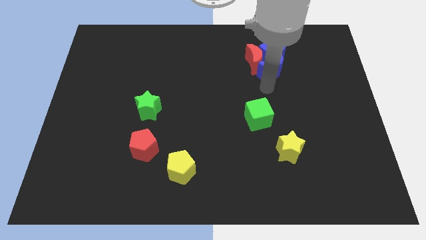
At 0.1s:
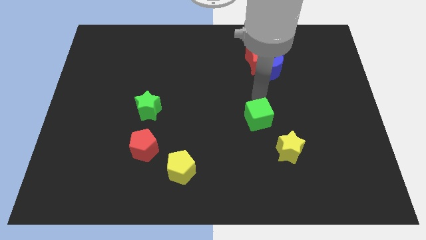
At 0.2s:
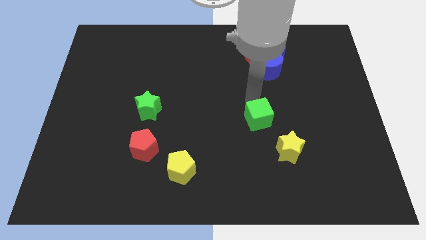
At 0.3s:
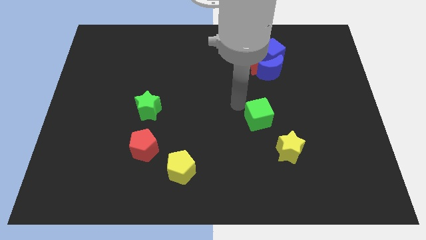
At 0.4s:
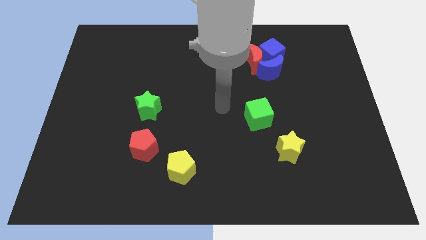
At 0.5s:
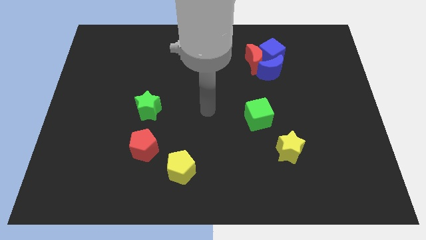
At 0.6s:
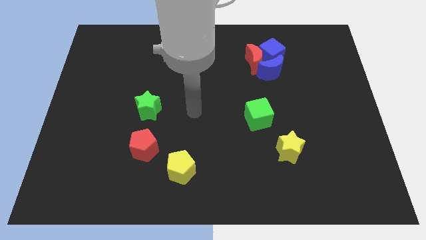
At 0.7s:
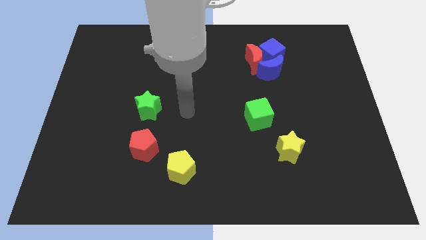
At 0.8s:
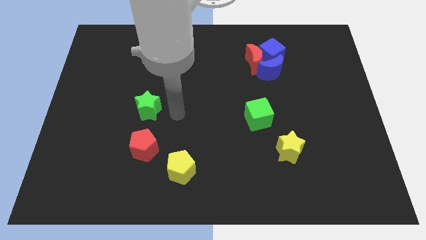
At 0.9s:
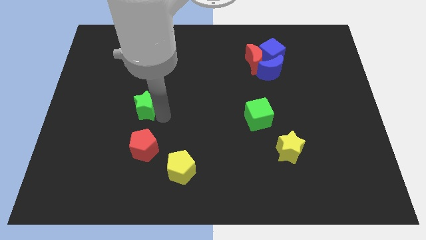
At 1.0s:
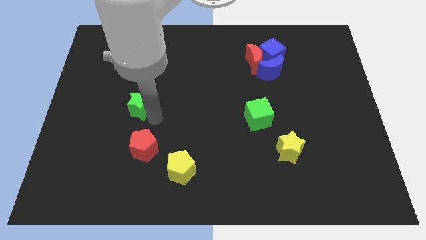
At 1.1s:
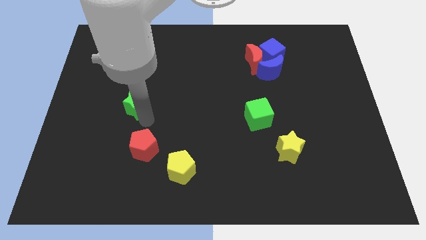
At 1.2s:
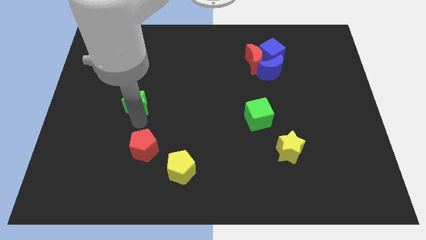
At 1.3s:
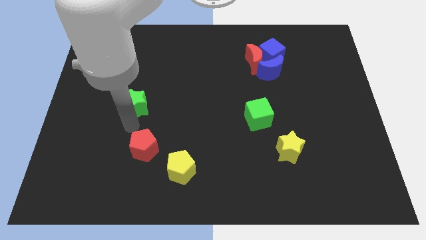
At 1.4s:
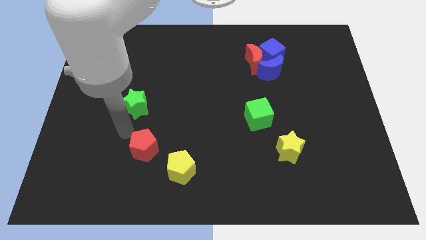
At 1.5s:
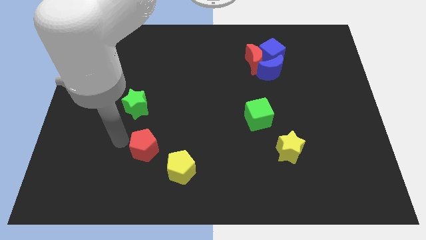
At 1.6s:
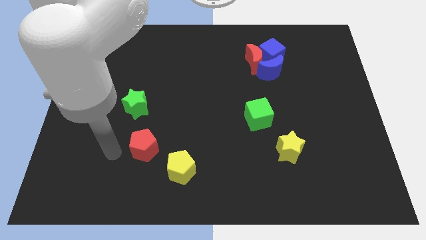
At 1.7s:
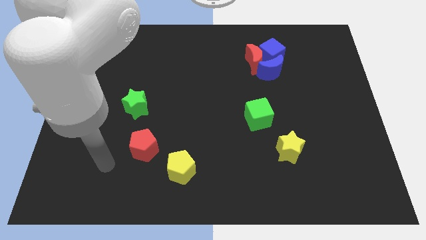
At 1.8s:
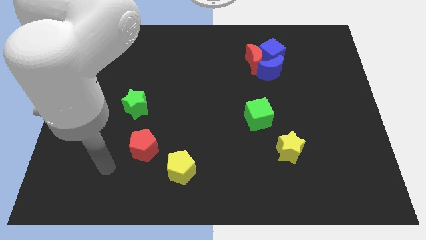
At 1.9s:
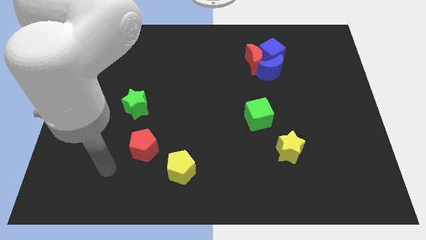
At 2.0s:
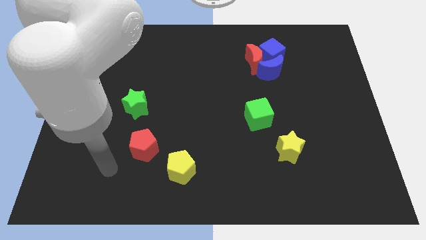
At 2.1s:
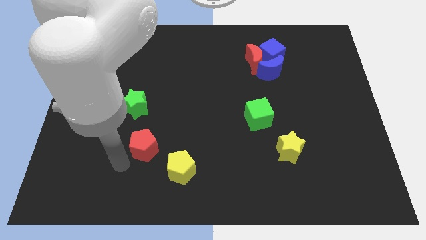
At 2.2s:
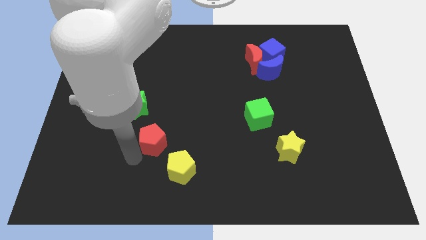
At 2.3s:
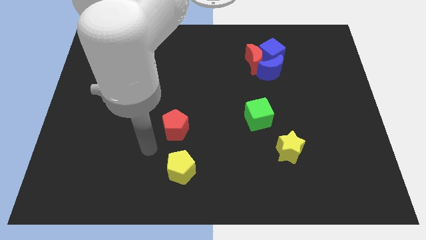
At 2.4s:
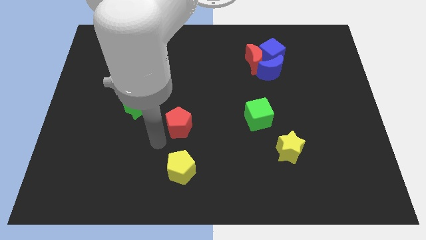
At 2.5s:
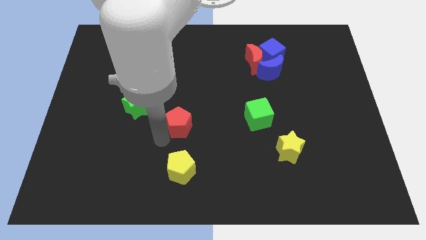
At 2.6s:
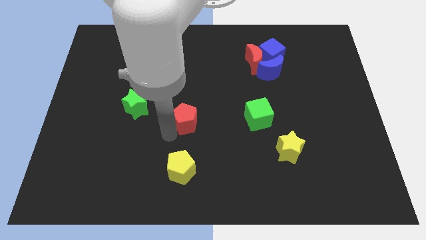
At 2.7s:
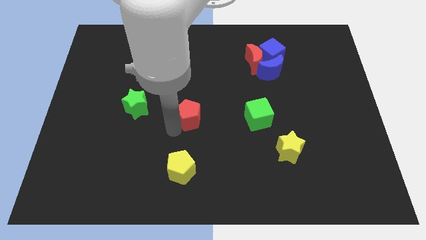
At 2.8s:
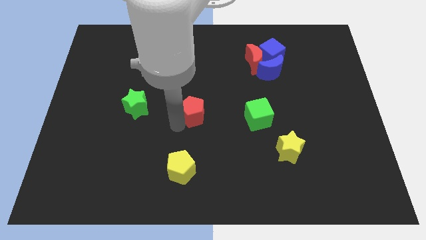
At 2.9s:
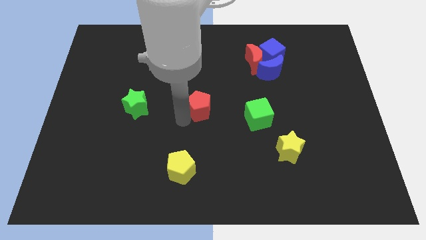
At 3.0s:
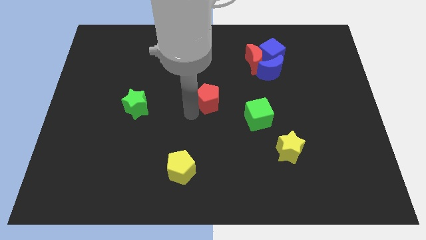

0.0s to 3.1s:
slide the red pentagon parallel right to the green star

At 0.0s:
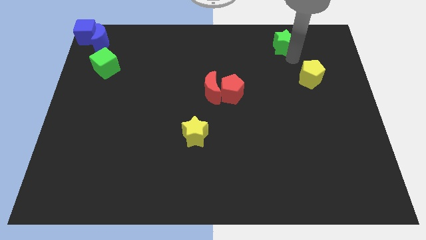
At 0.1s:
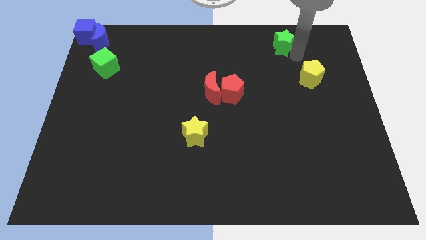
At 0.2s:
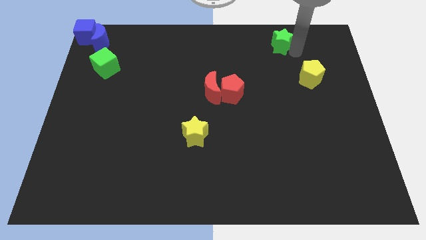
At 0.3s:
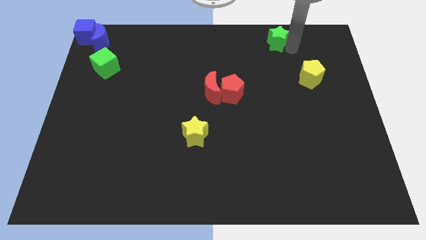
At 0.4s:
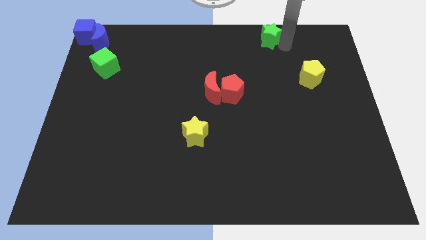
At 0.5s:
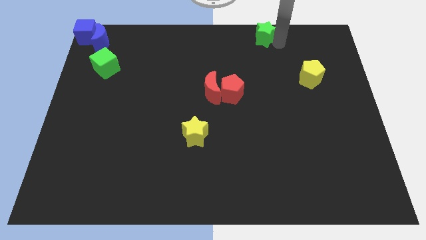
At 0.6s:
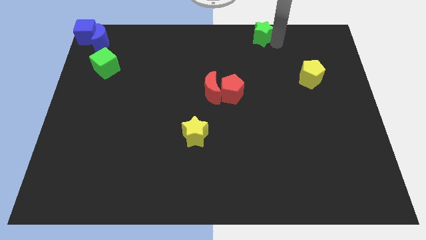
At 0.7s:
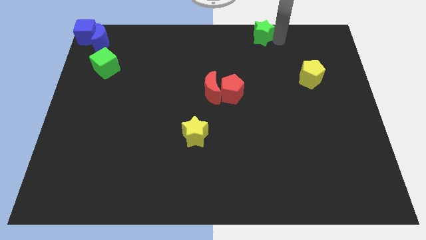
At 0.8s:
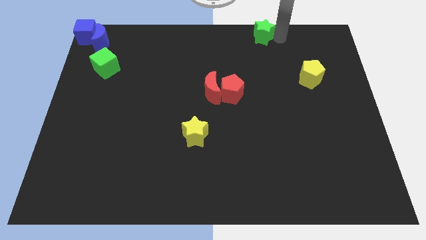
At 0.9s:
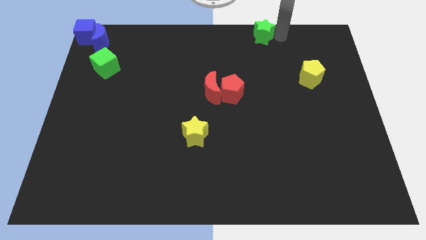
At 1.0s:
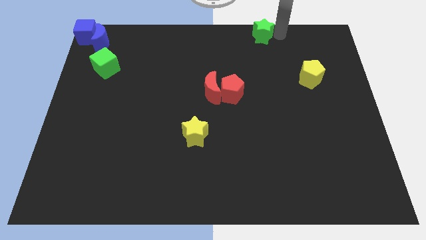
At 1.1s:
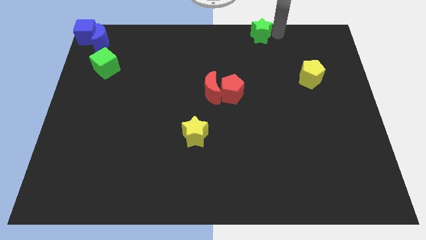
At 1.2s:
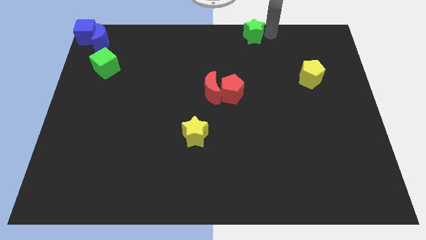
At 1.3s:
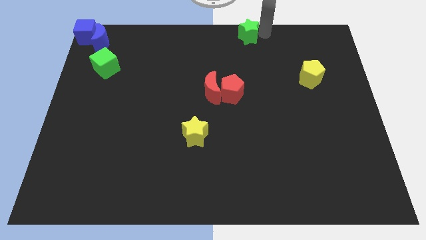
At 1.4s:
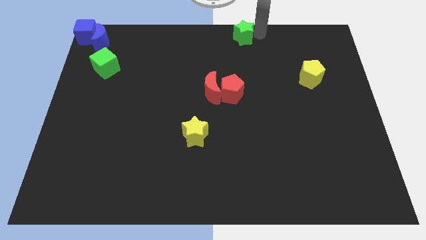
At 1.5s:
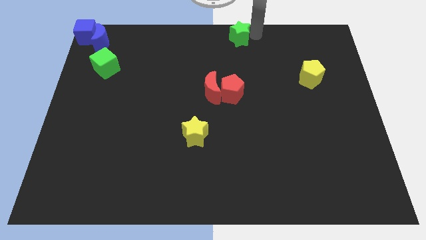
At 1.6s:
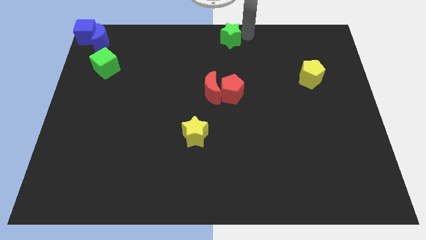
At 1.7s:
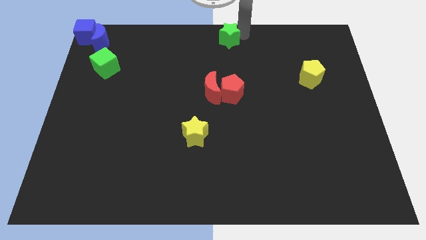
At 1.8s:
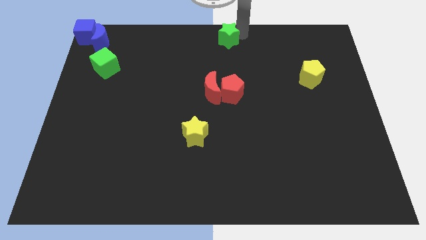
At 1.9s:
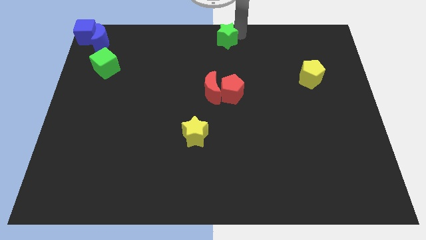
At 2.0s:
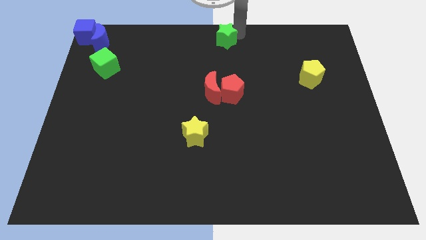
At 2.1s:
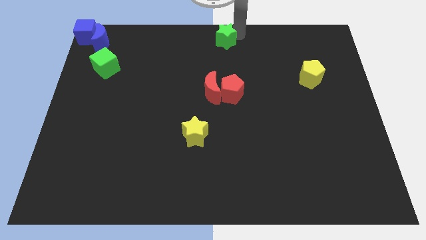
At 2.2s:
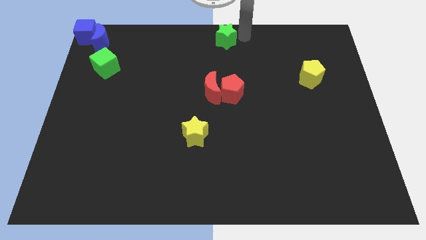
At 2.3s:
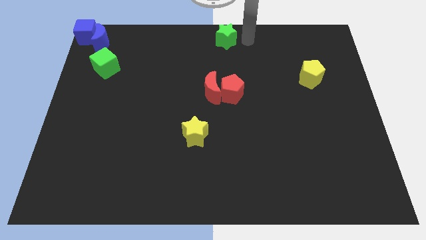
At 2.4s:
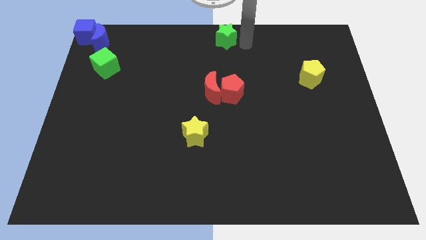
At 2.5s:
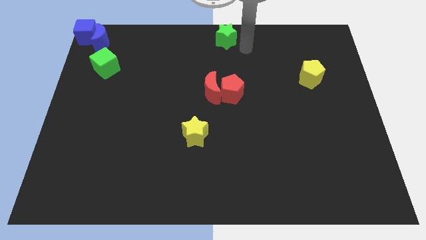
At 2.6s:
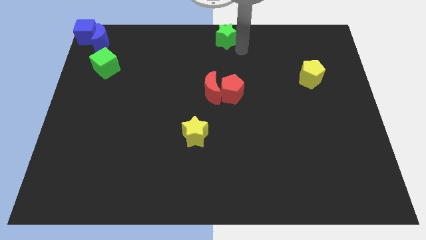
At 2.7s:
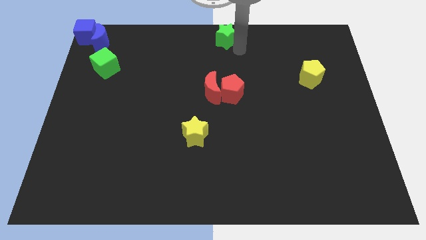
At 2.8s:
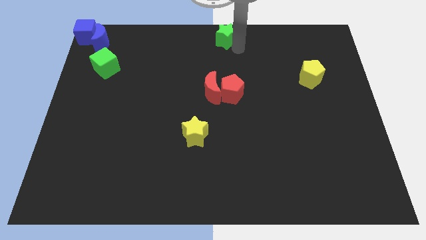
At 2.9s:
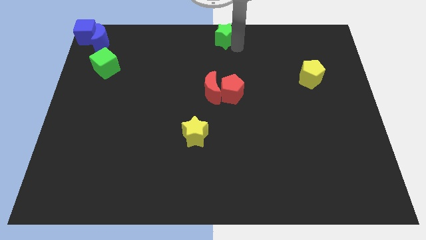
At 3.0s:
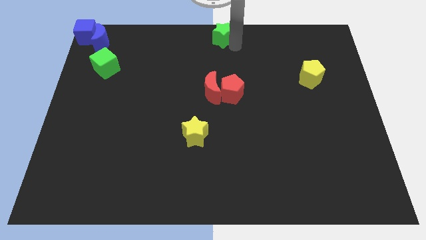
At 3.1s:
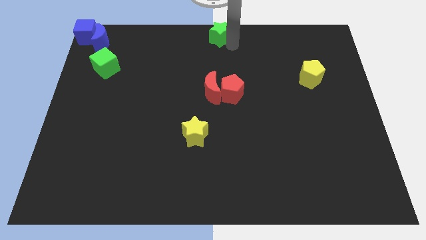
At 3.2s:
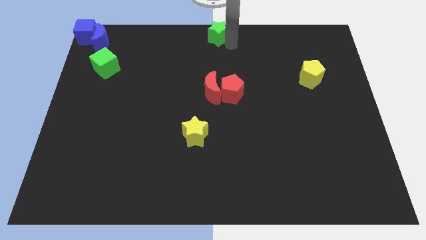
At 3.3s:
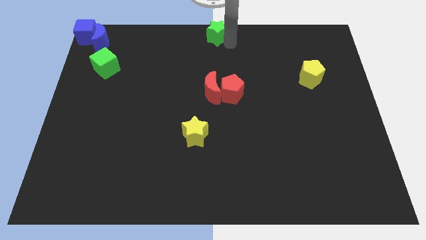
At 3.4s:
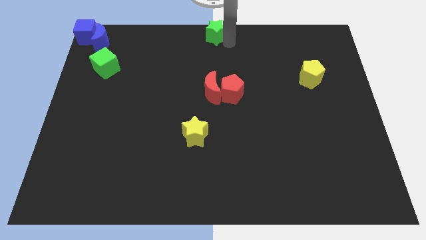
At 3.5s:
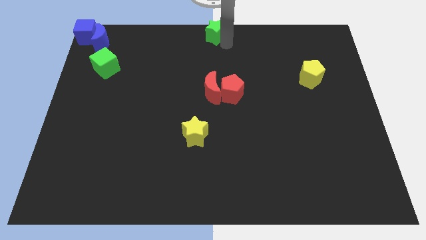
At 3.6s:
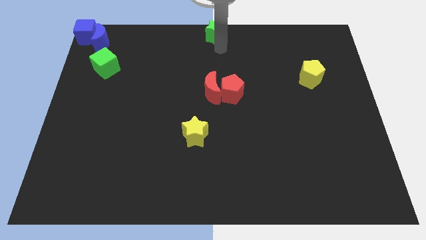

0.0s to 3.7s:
move the green star to the top center of the board

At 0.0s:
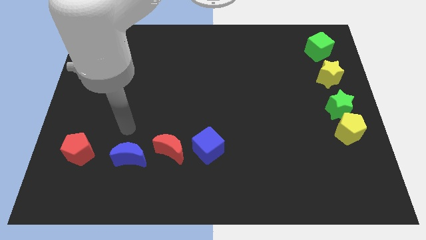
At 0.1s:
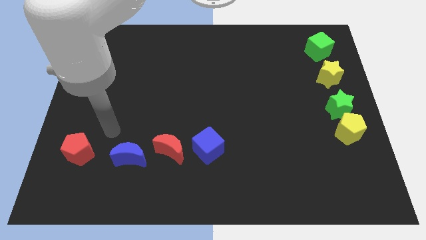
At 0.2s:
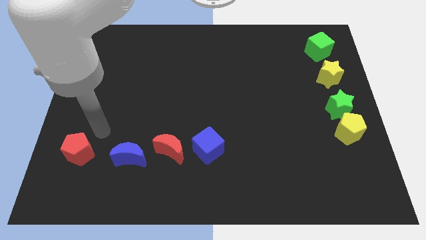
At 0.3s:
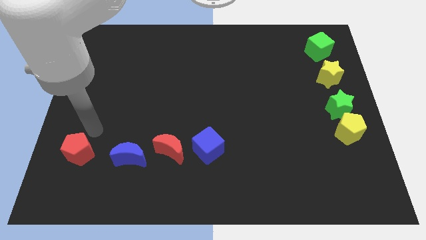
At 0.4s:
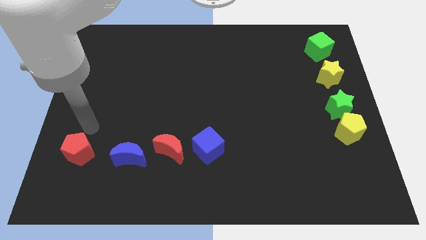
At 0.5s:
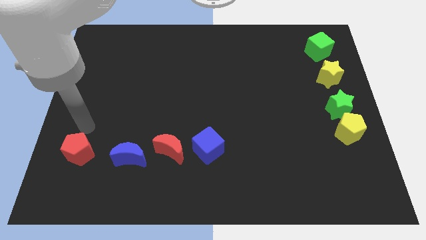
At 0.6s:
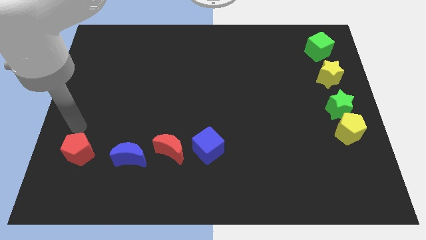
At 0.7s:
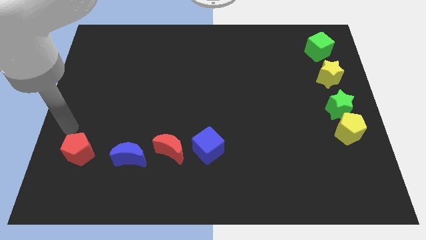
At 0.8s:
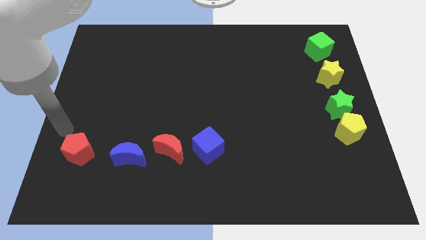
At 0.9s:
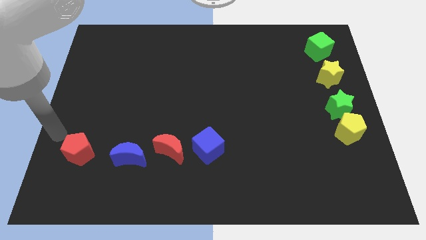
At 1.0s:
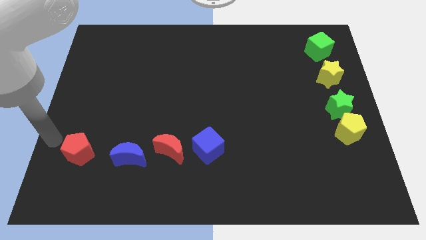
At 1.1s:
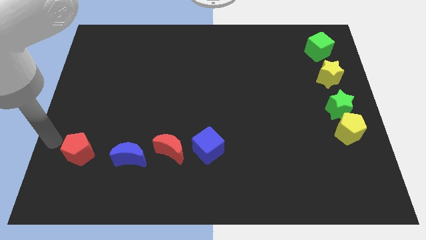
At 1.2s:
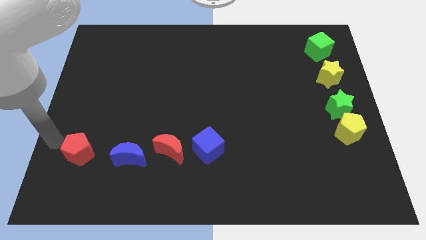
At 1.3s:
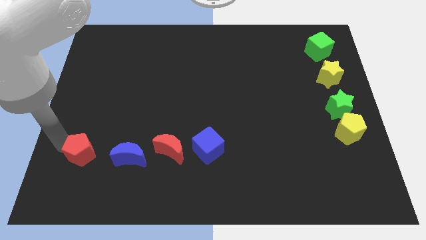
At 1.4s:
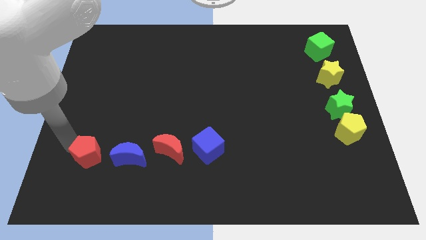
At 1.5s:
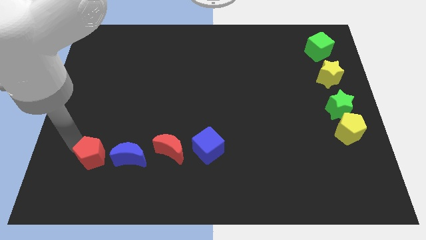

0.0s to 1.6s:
move the red pentagon to the left of the blue crescent

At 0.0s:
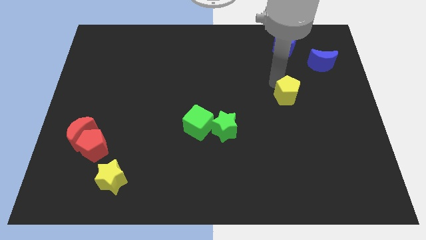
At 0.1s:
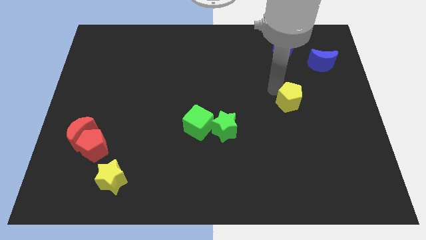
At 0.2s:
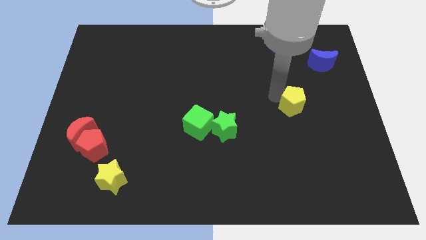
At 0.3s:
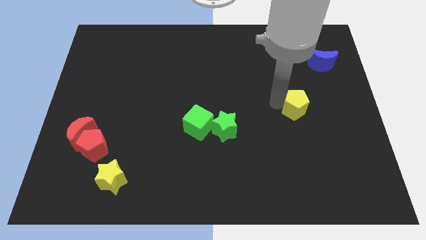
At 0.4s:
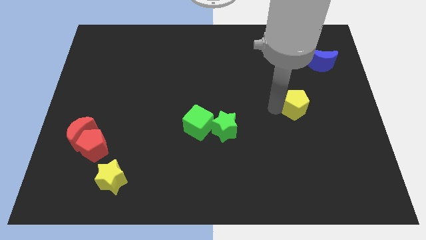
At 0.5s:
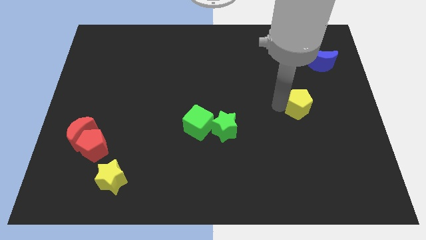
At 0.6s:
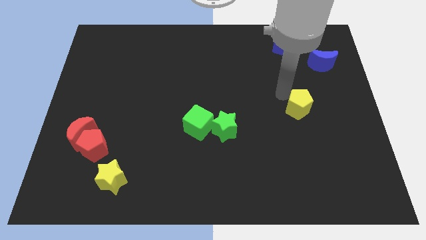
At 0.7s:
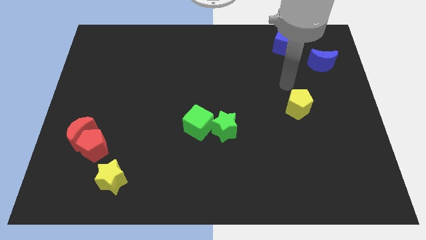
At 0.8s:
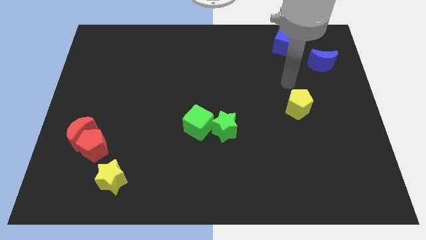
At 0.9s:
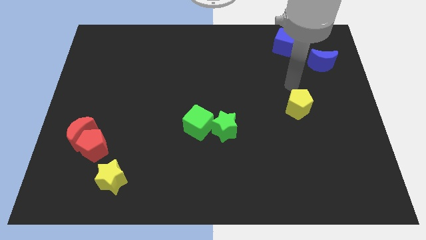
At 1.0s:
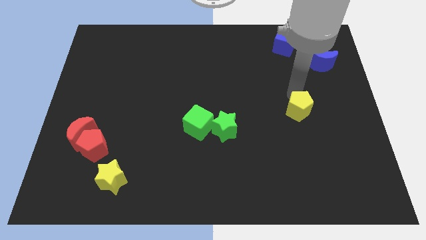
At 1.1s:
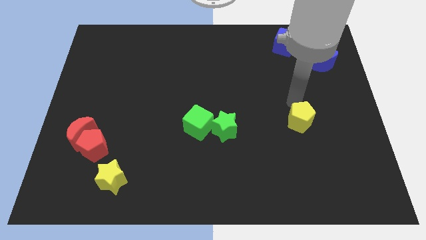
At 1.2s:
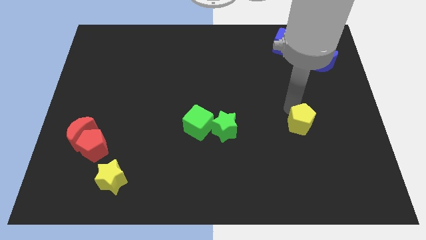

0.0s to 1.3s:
place the yellow pentagon at right side of the green star
